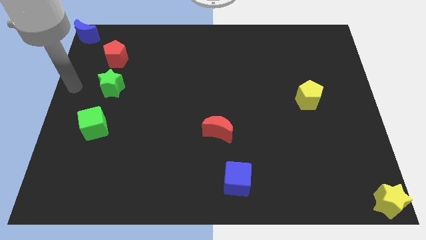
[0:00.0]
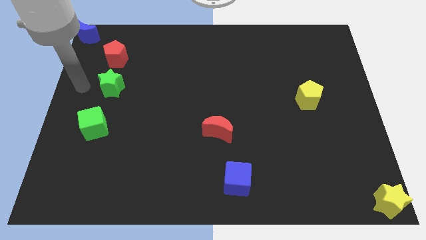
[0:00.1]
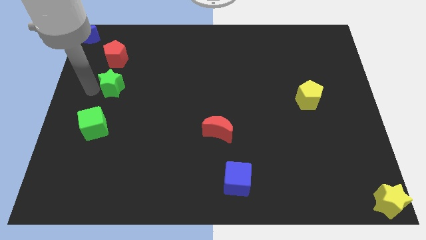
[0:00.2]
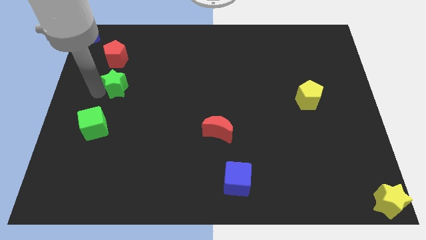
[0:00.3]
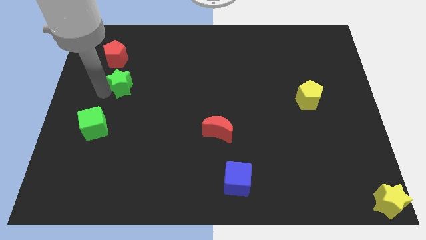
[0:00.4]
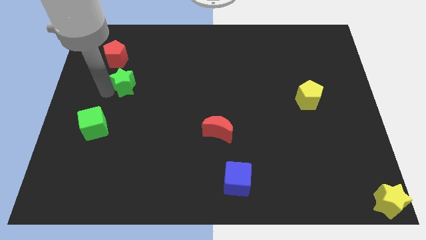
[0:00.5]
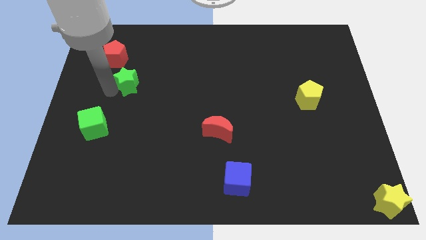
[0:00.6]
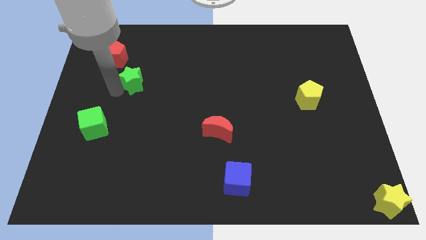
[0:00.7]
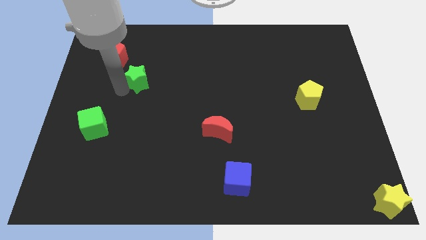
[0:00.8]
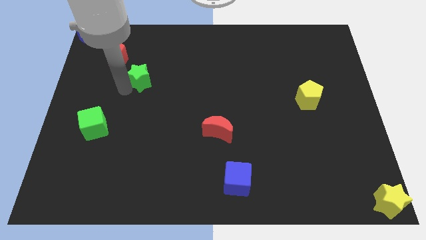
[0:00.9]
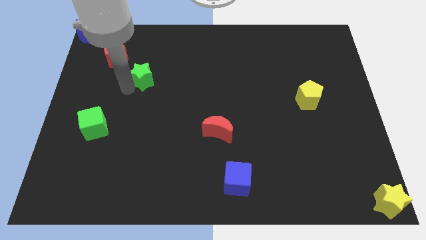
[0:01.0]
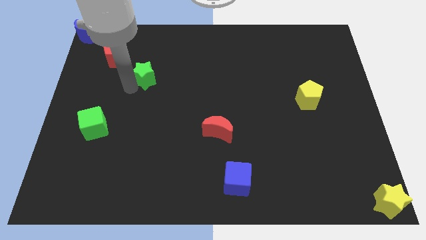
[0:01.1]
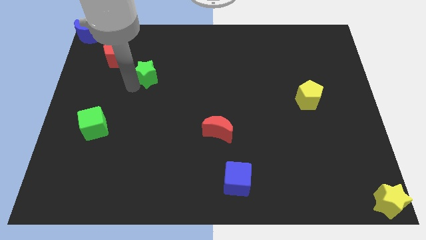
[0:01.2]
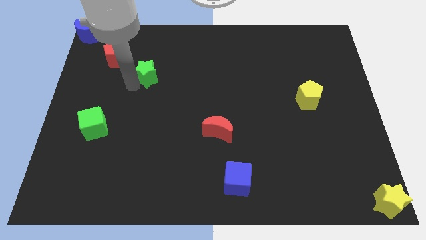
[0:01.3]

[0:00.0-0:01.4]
push green star to the right

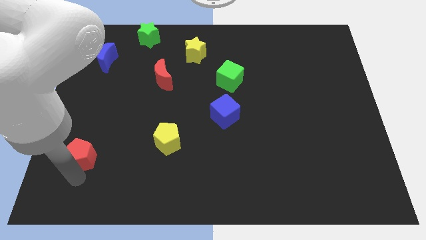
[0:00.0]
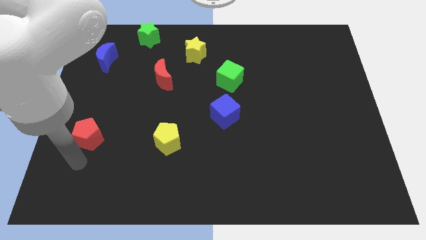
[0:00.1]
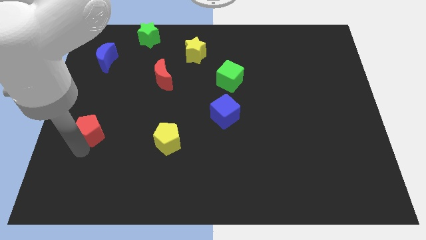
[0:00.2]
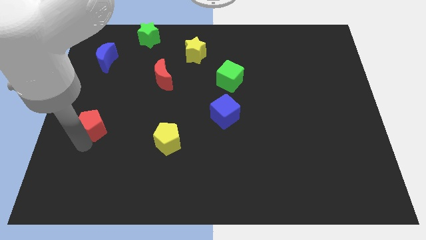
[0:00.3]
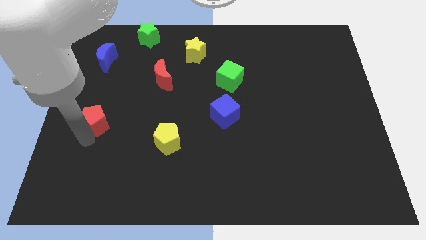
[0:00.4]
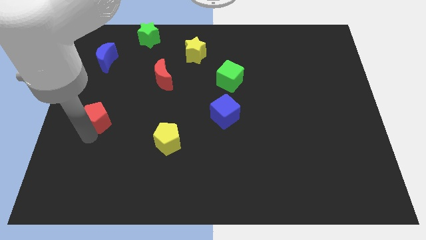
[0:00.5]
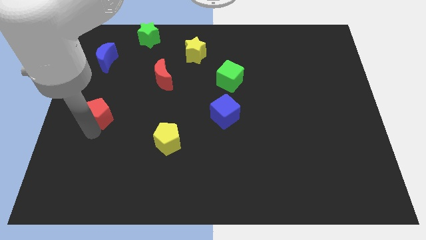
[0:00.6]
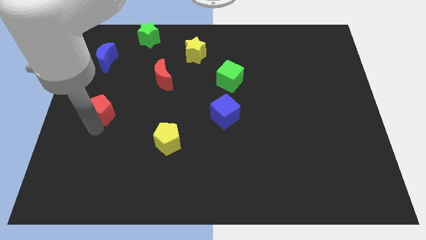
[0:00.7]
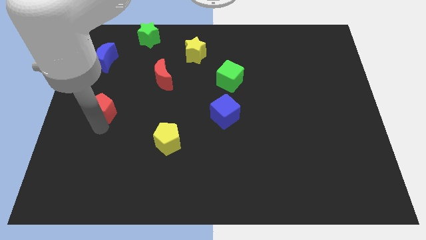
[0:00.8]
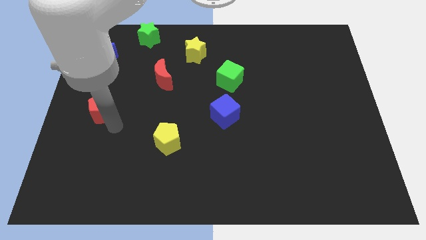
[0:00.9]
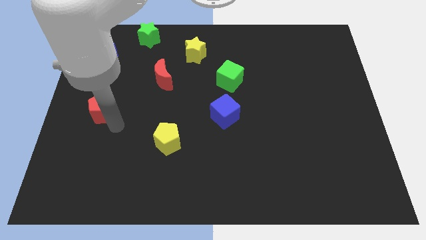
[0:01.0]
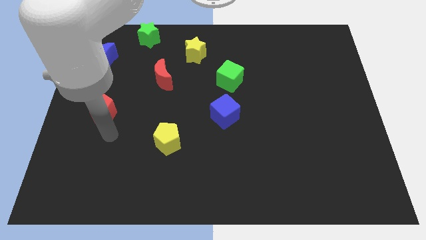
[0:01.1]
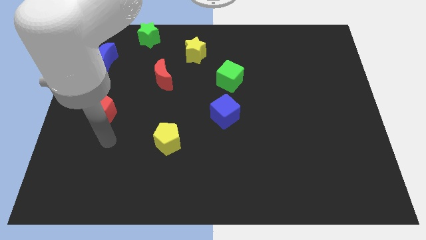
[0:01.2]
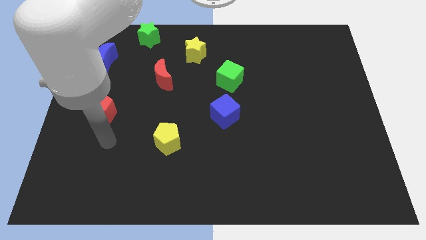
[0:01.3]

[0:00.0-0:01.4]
slide the red pentagon diagonally top left to the yellow pentagon

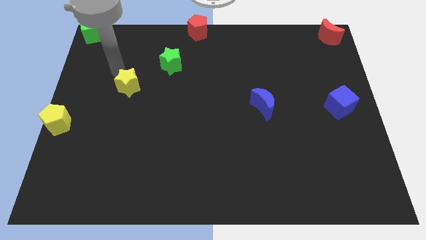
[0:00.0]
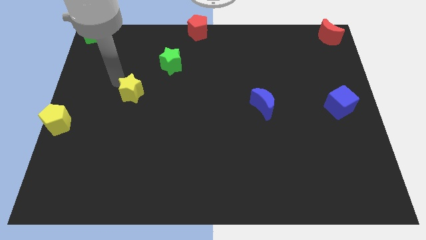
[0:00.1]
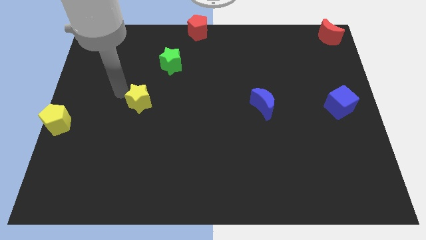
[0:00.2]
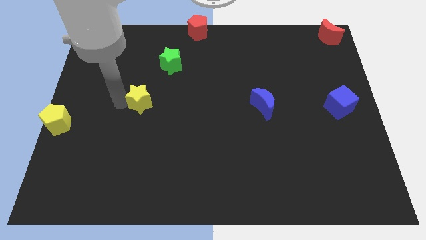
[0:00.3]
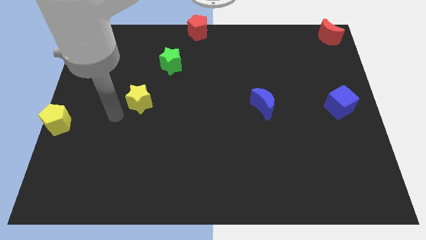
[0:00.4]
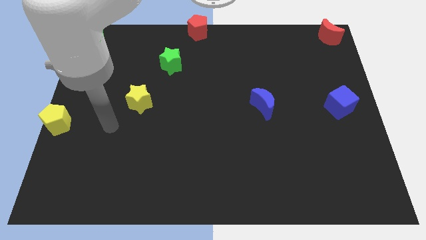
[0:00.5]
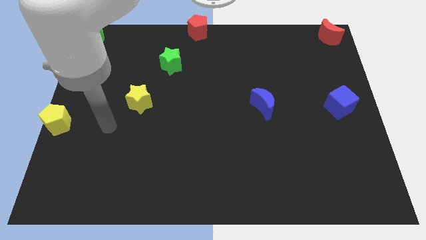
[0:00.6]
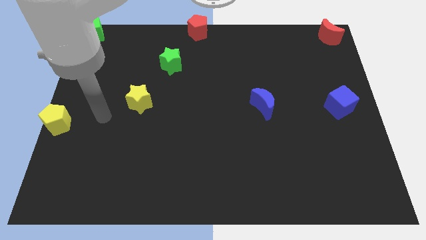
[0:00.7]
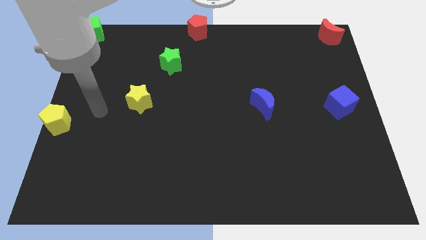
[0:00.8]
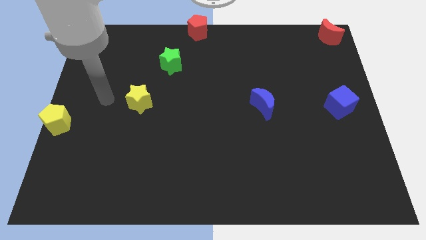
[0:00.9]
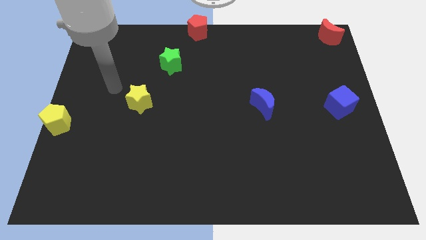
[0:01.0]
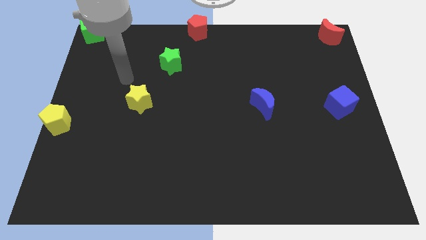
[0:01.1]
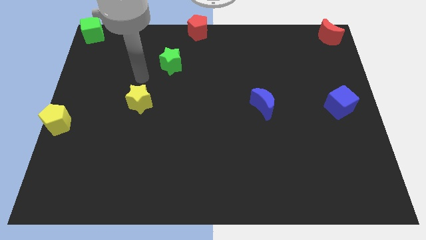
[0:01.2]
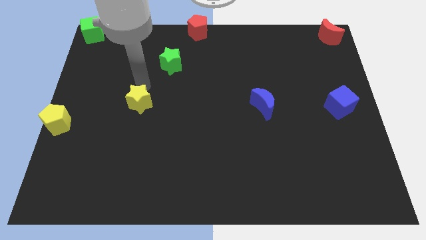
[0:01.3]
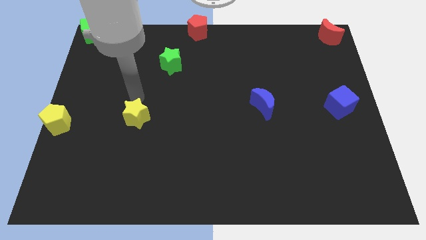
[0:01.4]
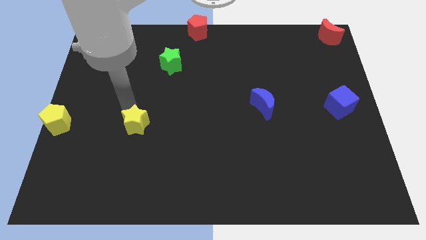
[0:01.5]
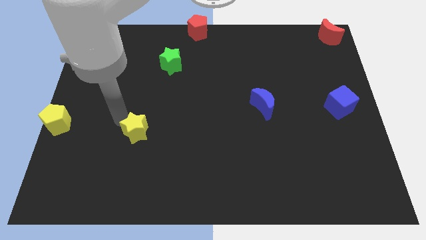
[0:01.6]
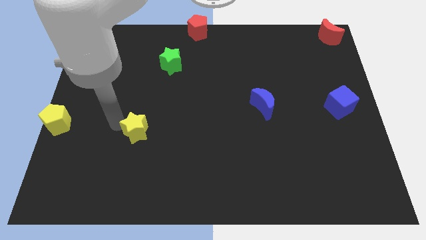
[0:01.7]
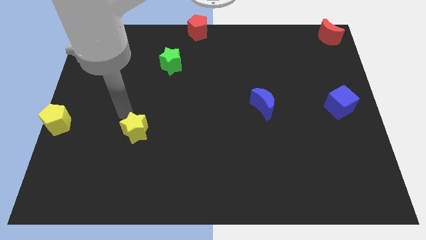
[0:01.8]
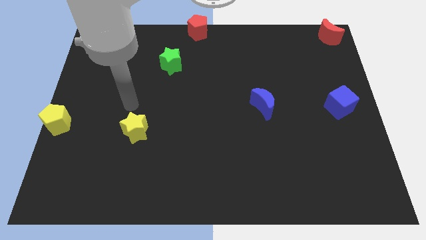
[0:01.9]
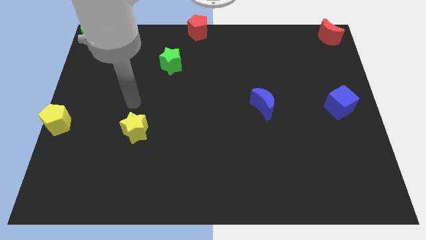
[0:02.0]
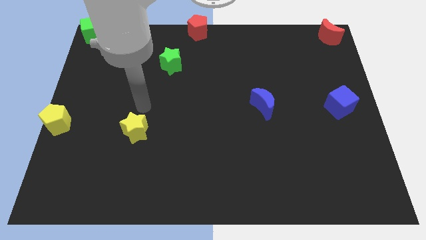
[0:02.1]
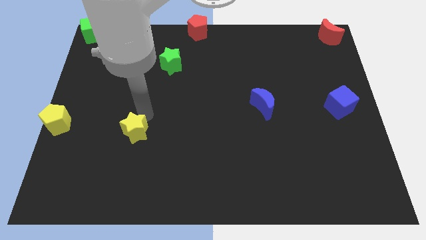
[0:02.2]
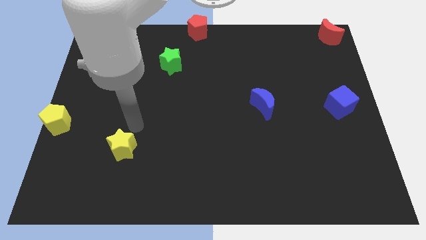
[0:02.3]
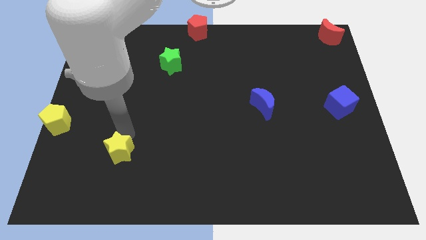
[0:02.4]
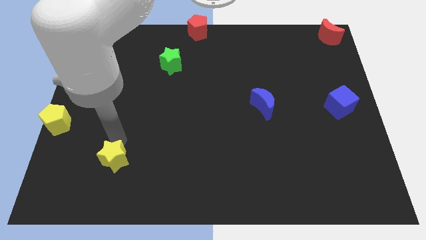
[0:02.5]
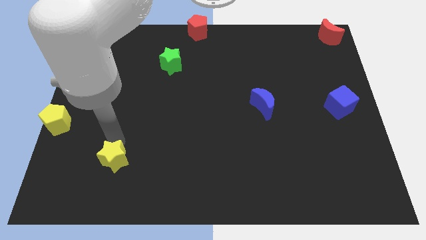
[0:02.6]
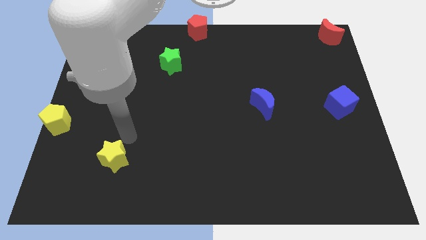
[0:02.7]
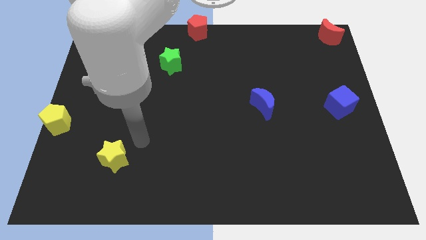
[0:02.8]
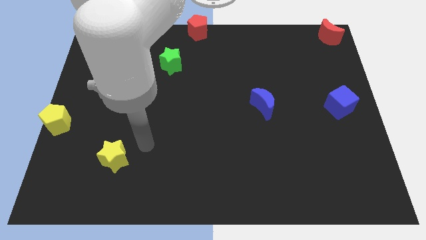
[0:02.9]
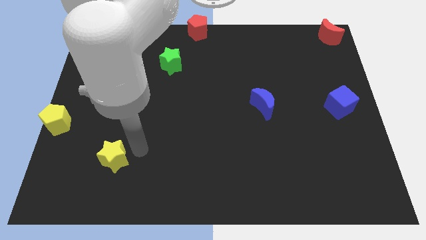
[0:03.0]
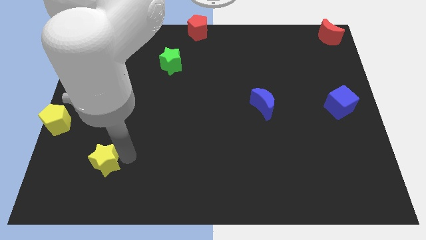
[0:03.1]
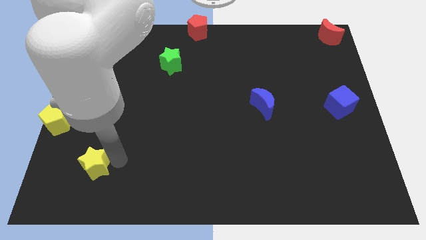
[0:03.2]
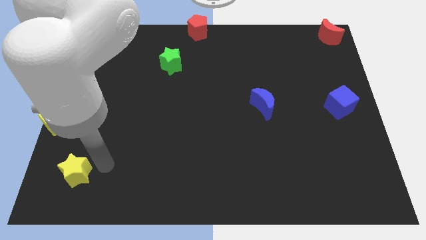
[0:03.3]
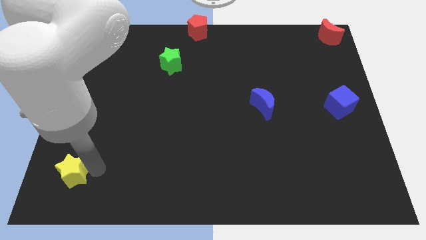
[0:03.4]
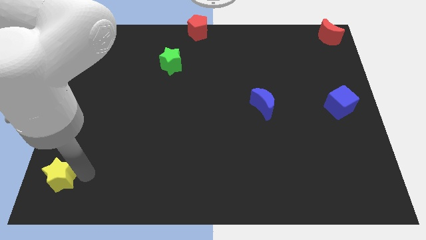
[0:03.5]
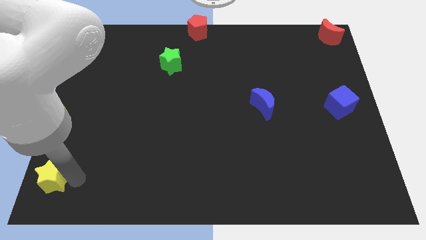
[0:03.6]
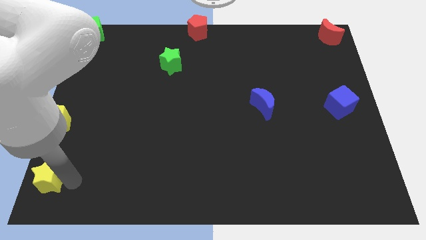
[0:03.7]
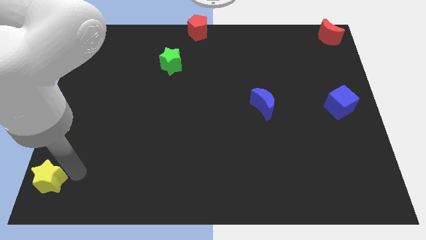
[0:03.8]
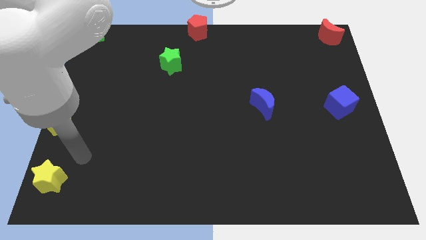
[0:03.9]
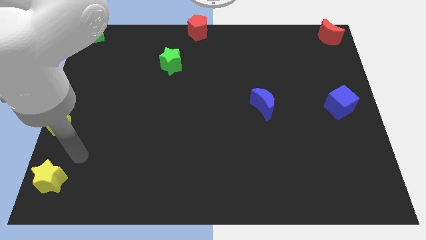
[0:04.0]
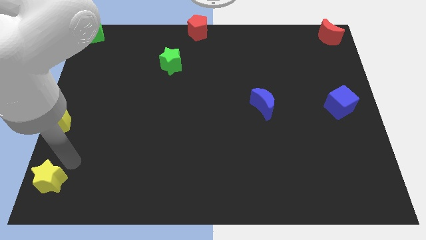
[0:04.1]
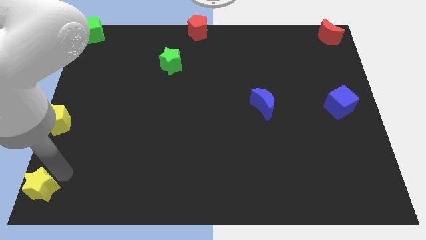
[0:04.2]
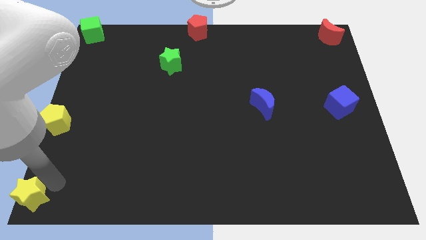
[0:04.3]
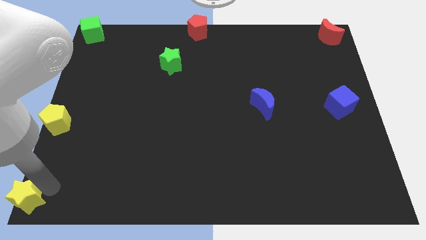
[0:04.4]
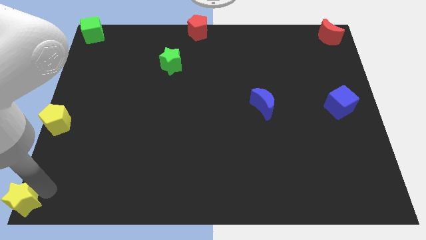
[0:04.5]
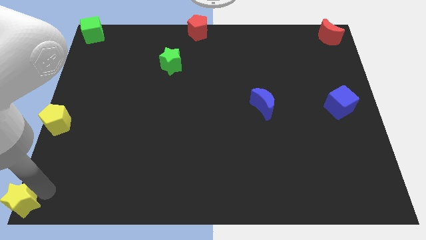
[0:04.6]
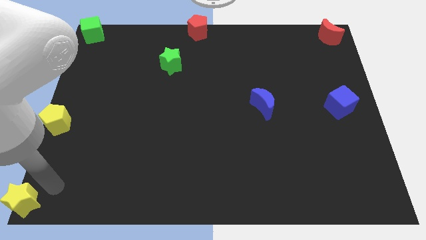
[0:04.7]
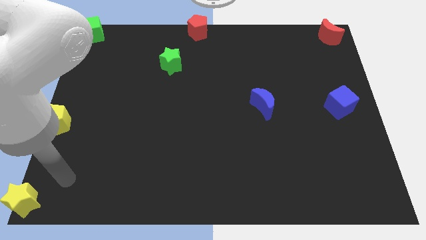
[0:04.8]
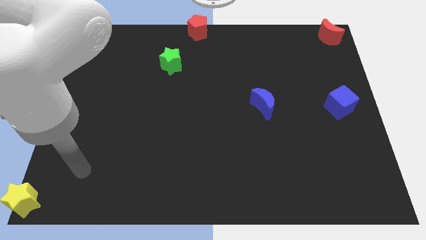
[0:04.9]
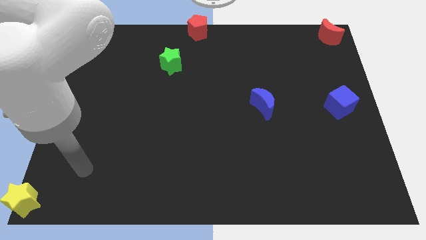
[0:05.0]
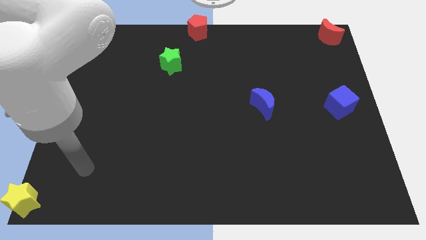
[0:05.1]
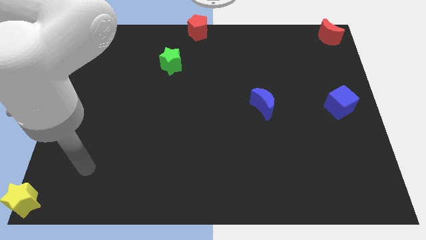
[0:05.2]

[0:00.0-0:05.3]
push the green star to the bottom left of the board

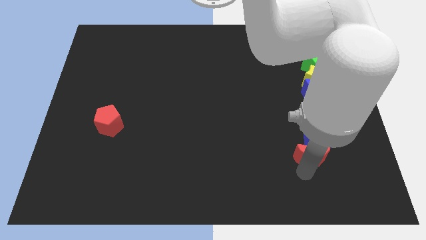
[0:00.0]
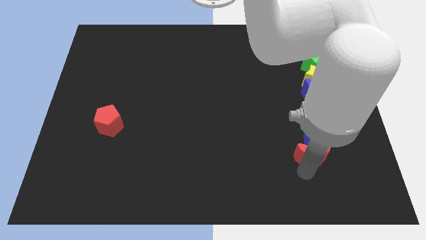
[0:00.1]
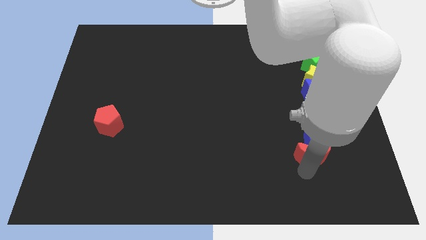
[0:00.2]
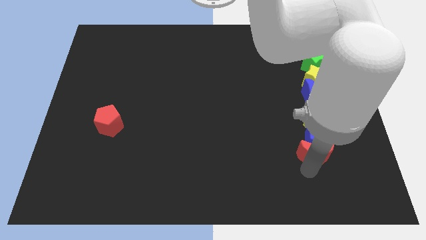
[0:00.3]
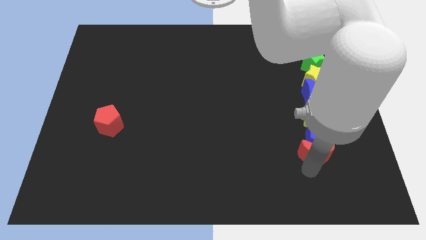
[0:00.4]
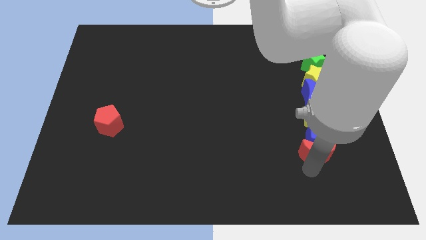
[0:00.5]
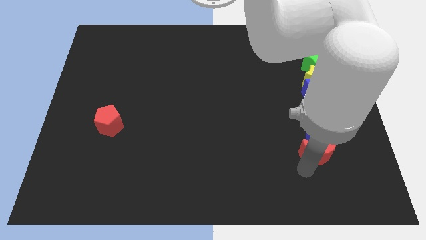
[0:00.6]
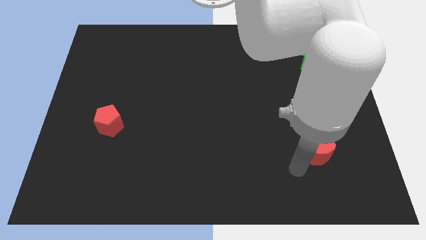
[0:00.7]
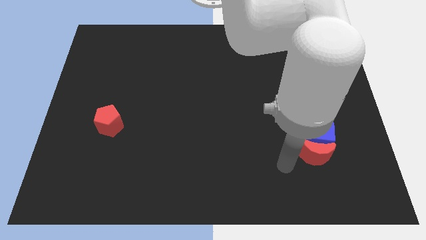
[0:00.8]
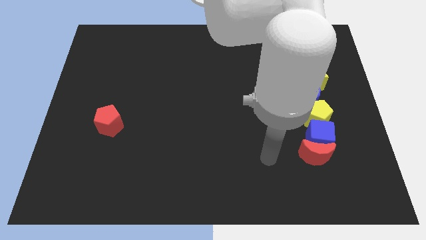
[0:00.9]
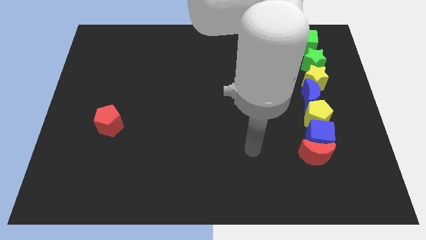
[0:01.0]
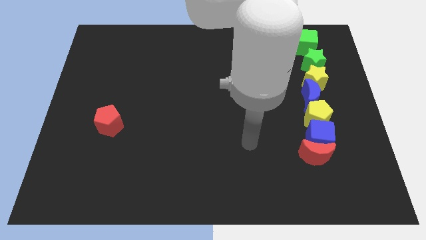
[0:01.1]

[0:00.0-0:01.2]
adjust the red crescent to the bottom of the blue cube
